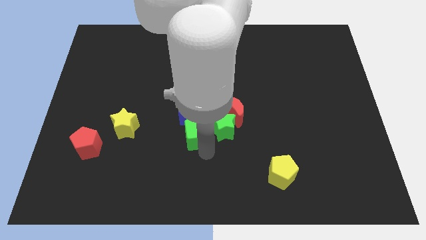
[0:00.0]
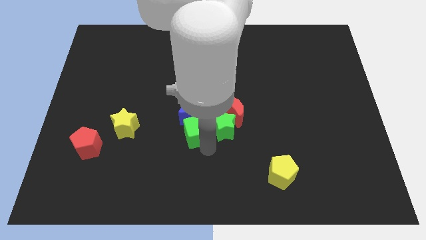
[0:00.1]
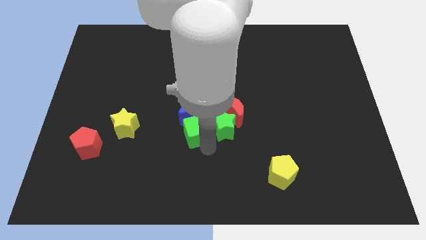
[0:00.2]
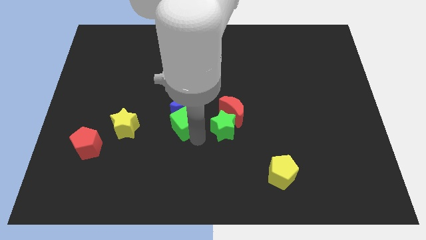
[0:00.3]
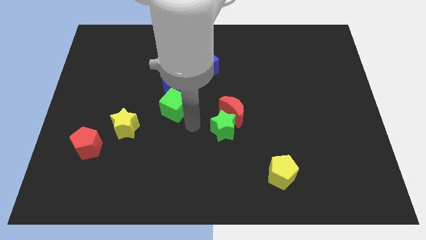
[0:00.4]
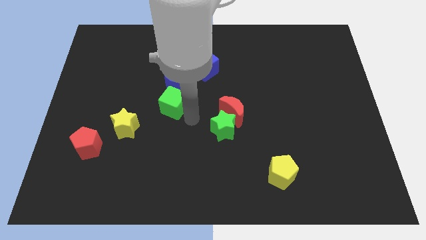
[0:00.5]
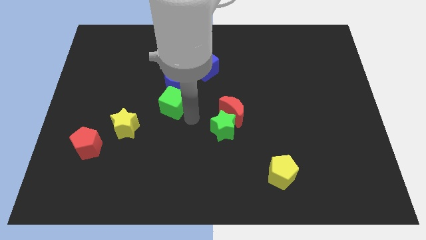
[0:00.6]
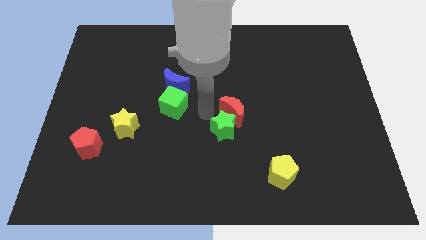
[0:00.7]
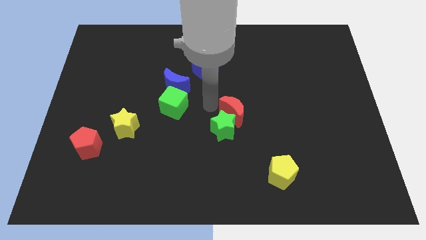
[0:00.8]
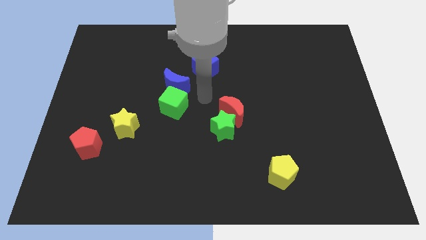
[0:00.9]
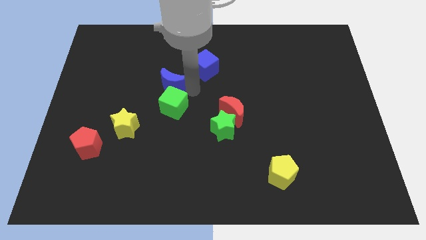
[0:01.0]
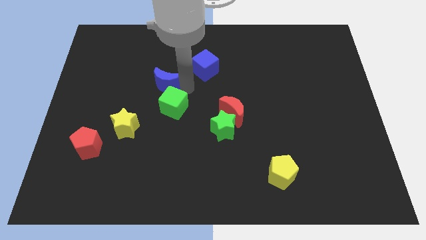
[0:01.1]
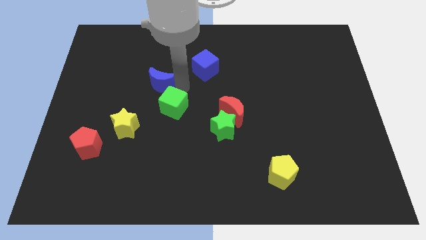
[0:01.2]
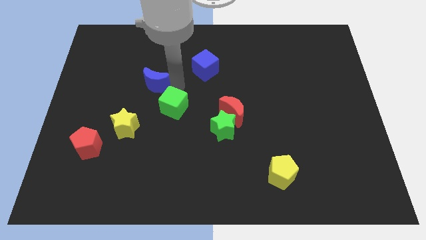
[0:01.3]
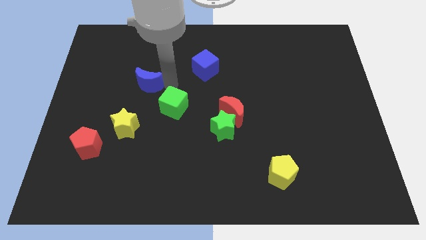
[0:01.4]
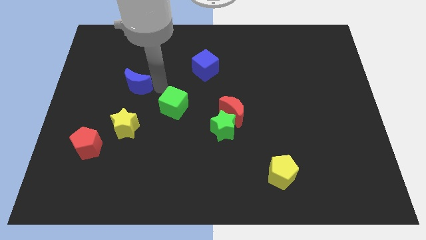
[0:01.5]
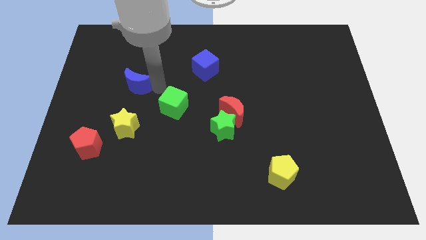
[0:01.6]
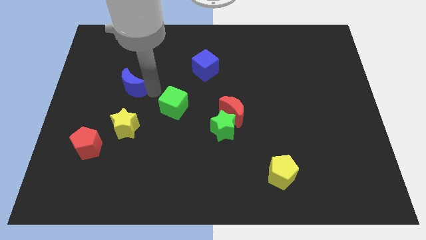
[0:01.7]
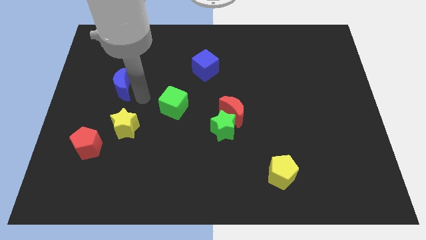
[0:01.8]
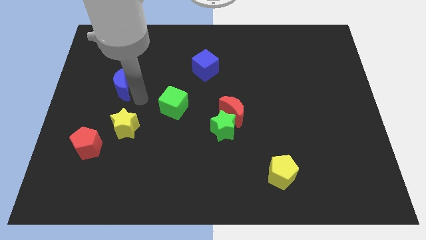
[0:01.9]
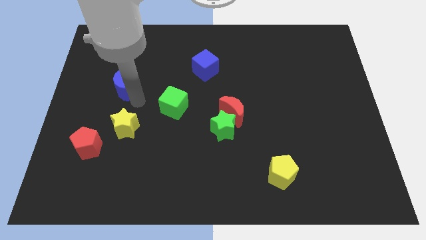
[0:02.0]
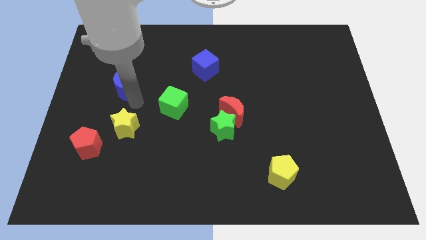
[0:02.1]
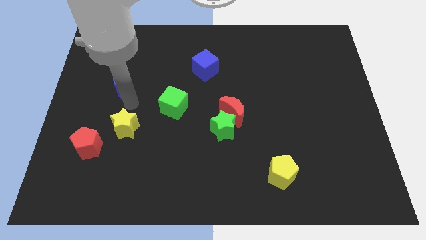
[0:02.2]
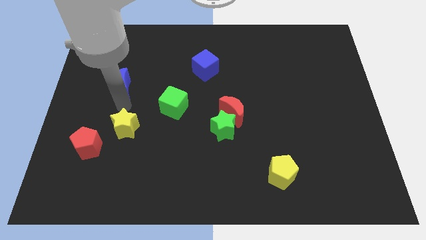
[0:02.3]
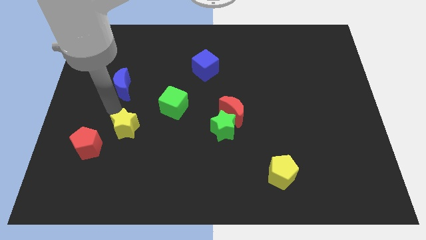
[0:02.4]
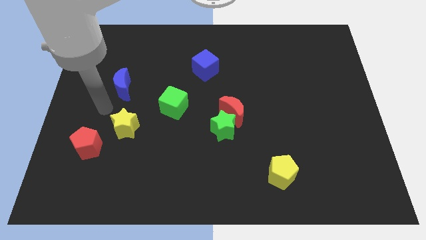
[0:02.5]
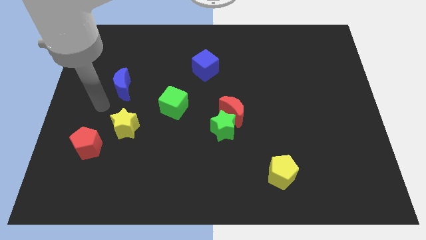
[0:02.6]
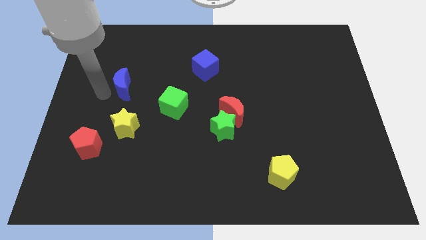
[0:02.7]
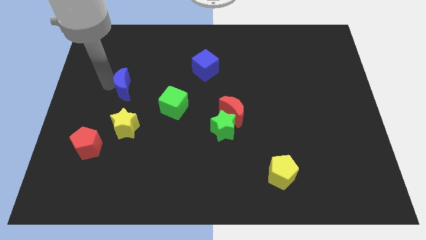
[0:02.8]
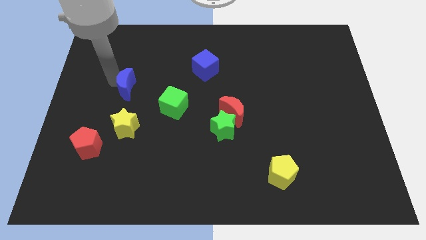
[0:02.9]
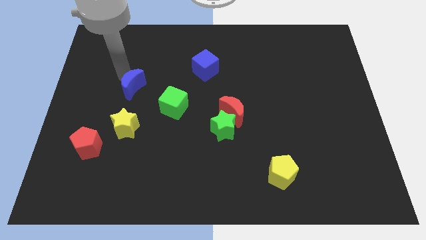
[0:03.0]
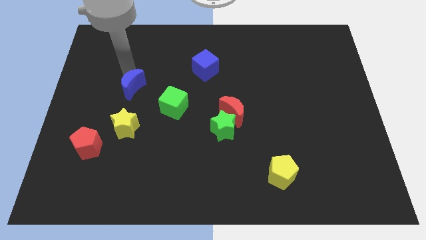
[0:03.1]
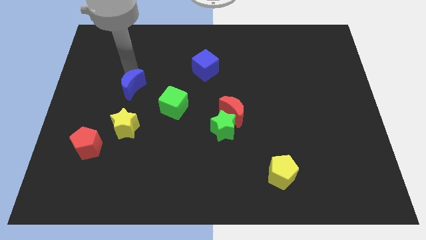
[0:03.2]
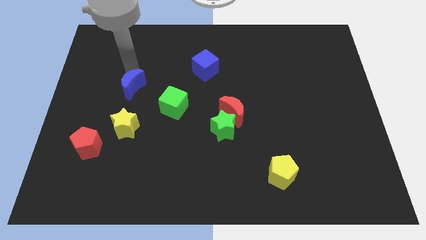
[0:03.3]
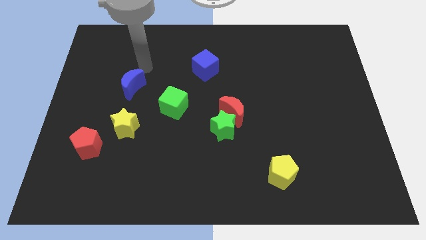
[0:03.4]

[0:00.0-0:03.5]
push the blue moon above the yellow star

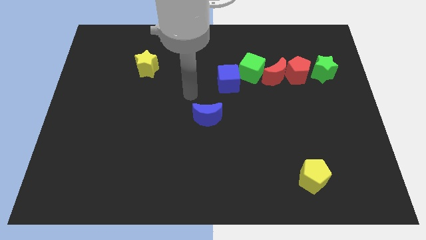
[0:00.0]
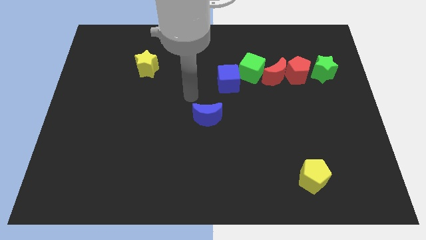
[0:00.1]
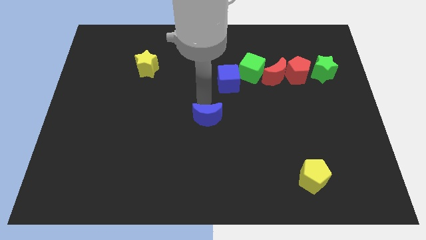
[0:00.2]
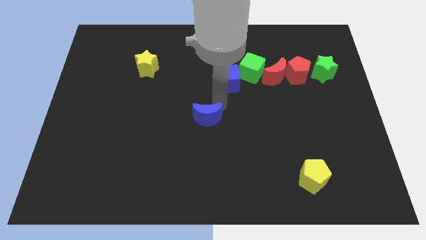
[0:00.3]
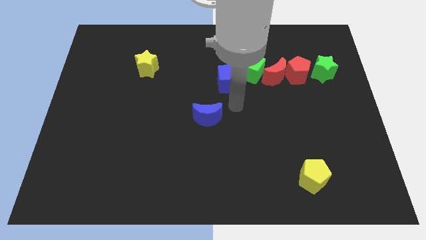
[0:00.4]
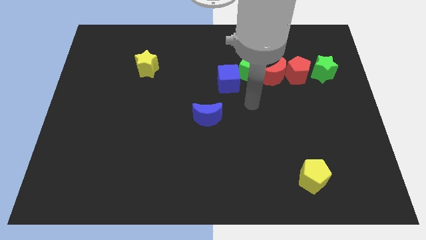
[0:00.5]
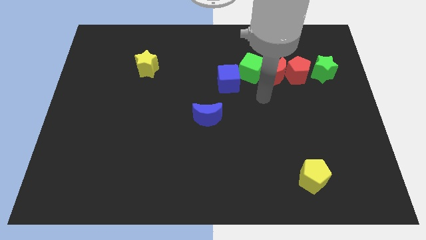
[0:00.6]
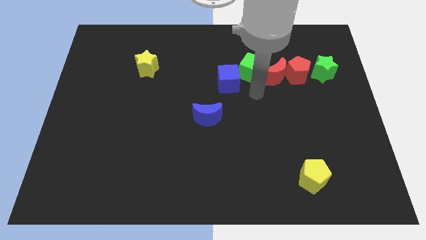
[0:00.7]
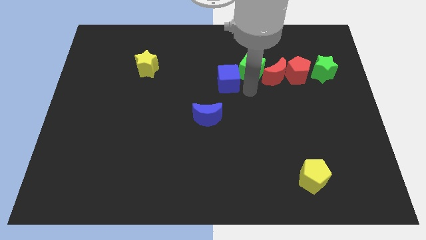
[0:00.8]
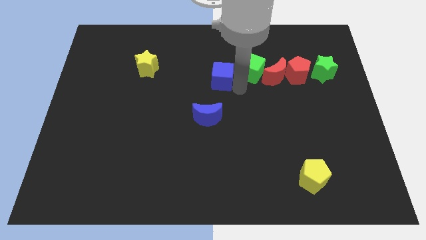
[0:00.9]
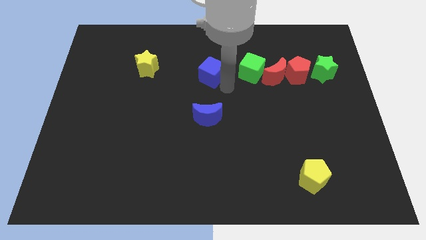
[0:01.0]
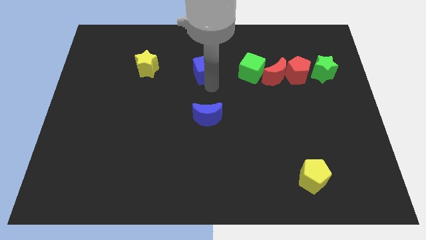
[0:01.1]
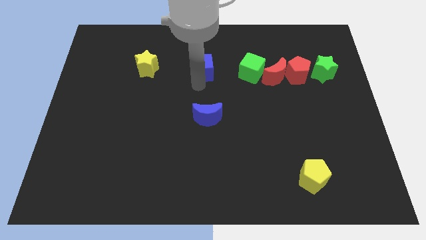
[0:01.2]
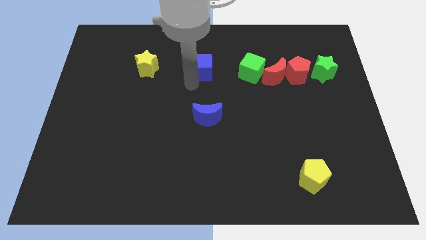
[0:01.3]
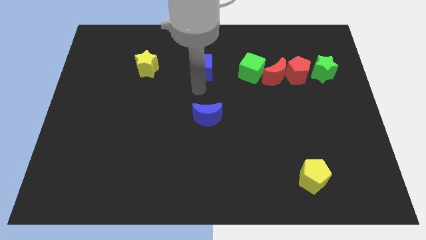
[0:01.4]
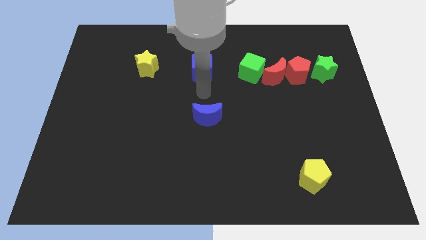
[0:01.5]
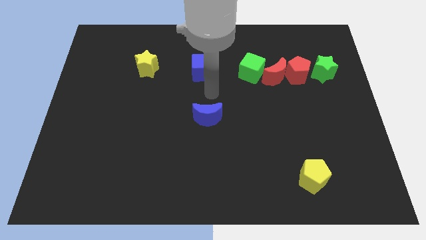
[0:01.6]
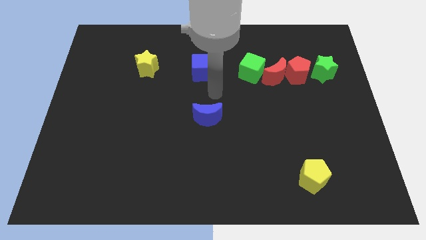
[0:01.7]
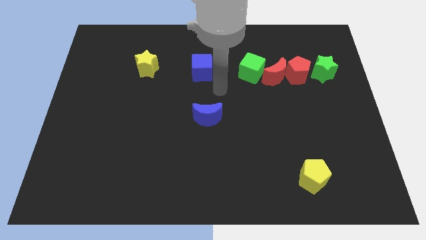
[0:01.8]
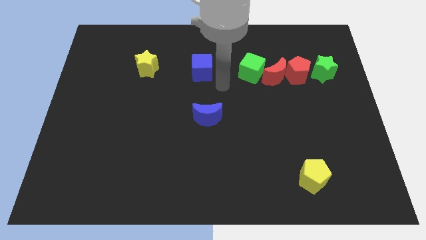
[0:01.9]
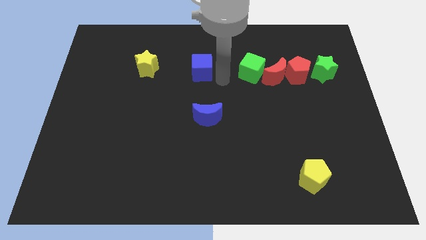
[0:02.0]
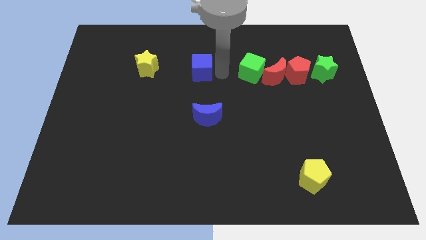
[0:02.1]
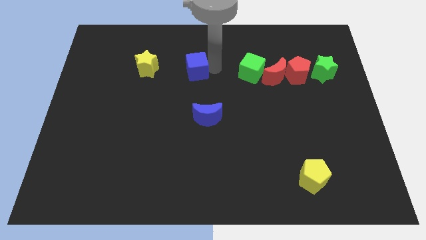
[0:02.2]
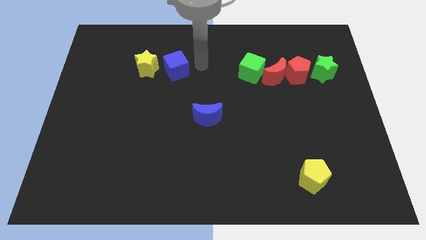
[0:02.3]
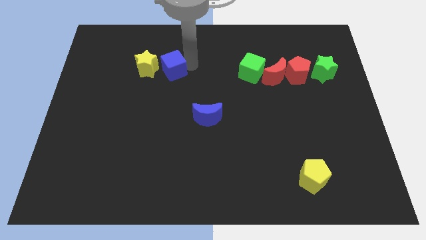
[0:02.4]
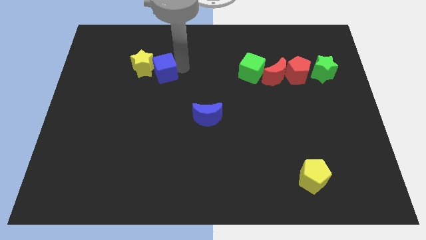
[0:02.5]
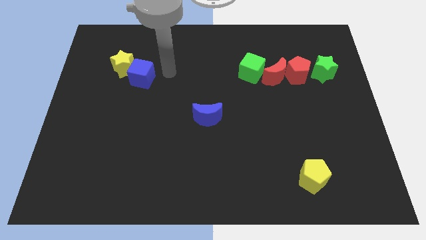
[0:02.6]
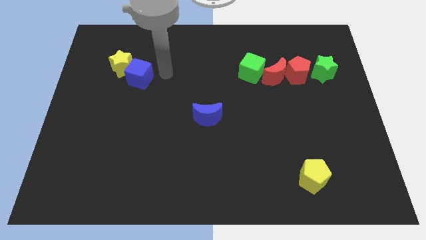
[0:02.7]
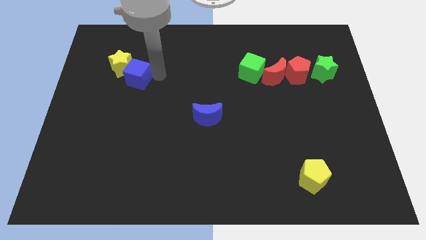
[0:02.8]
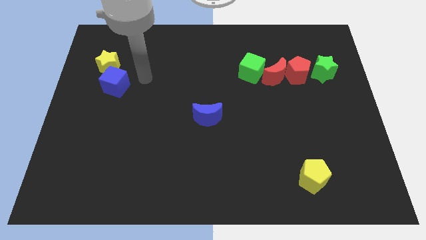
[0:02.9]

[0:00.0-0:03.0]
push the blue cube into the yellow star

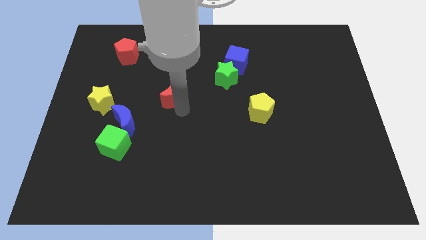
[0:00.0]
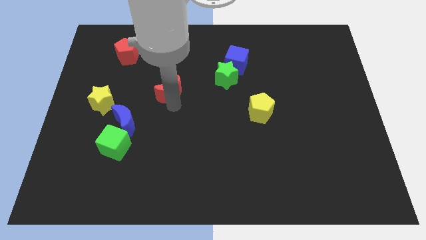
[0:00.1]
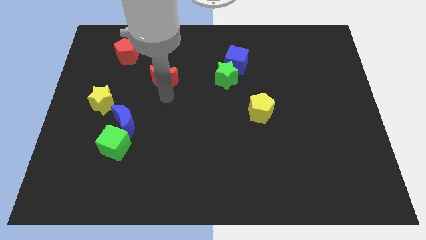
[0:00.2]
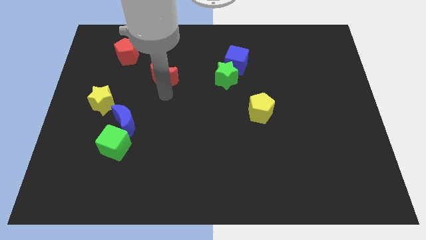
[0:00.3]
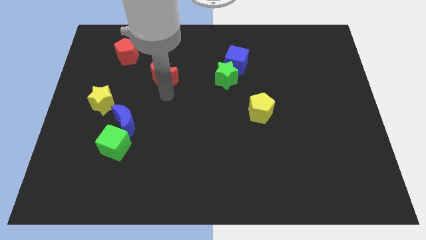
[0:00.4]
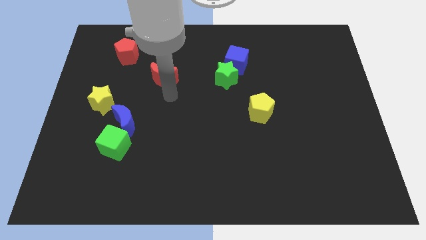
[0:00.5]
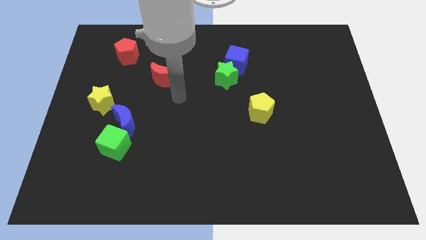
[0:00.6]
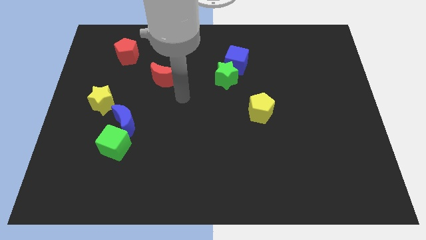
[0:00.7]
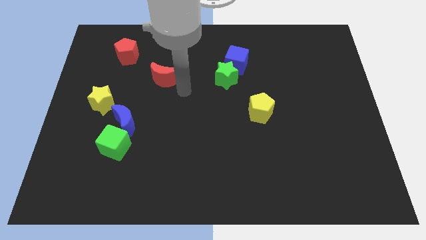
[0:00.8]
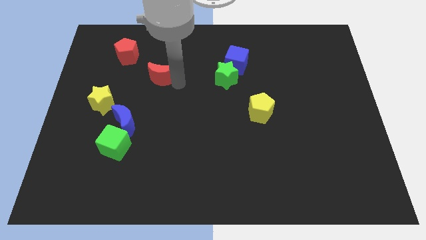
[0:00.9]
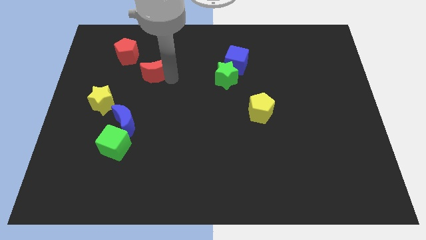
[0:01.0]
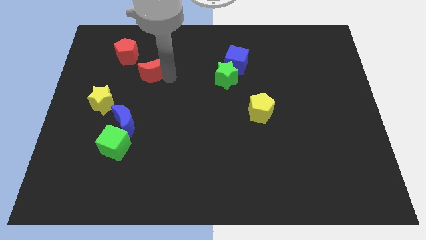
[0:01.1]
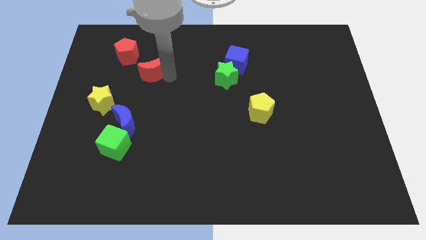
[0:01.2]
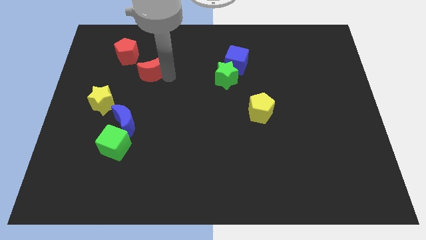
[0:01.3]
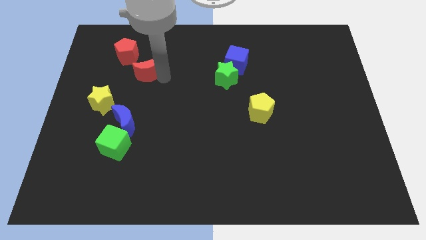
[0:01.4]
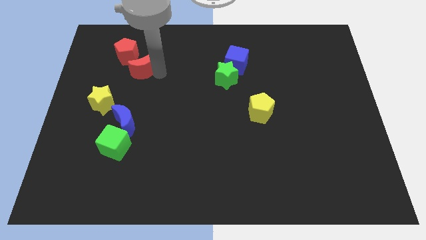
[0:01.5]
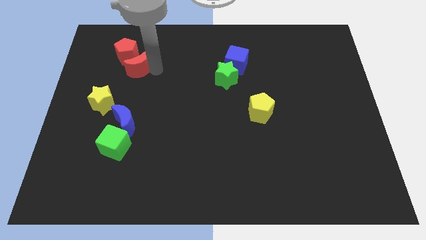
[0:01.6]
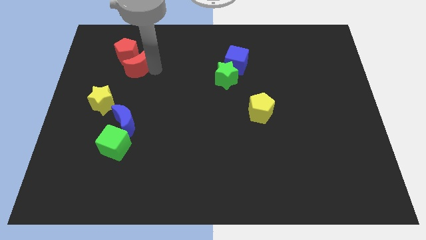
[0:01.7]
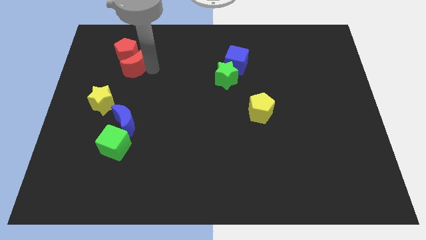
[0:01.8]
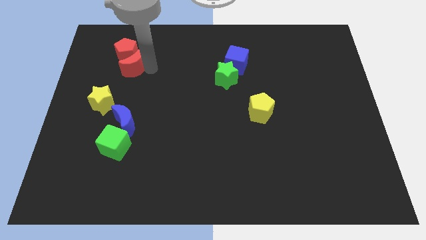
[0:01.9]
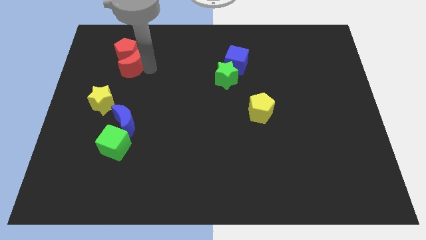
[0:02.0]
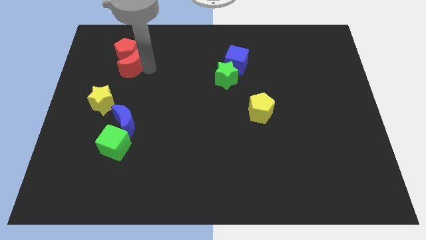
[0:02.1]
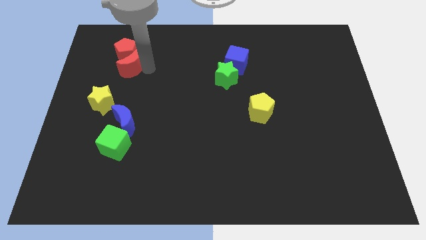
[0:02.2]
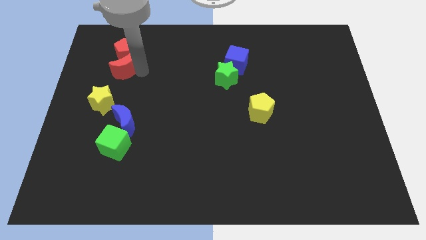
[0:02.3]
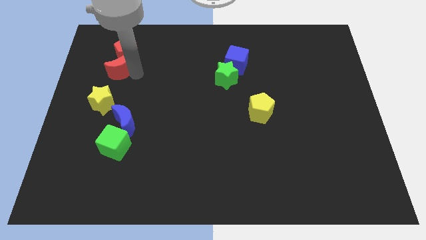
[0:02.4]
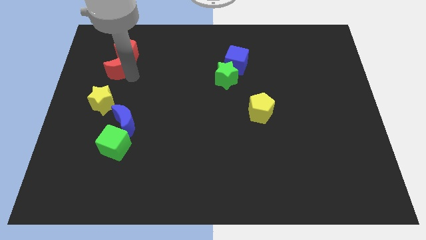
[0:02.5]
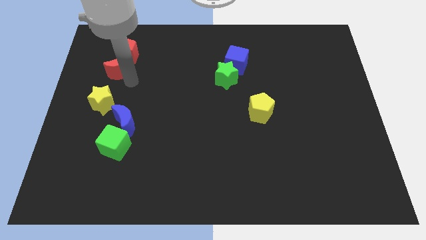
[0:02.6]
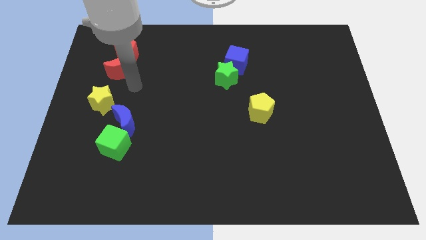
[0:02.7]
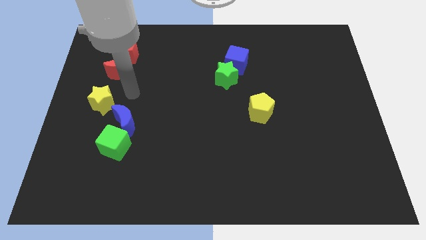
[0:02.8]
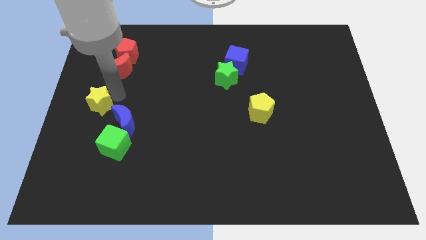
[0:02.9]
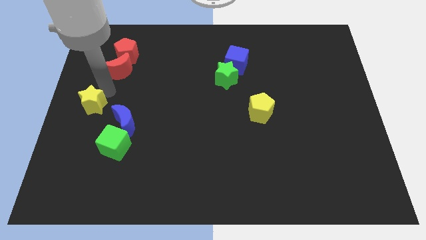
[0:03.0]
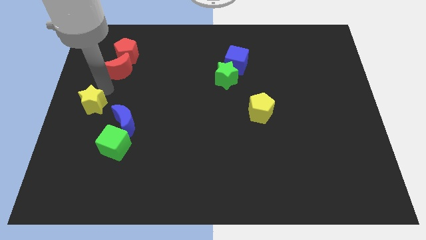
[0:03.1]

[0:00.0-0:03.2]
push red crescent into red pentagon
